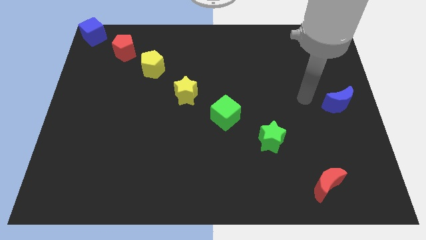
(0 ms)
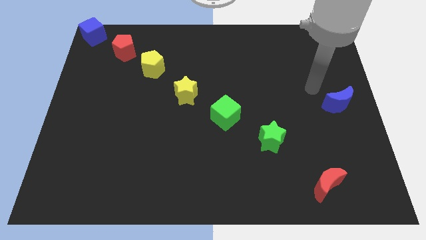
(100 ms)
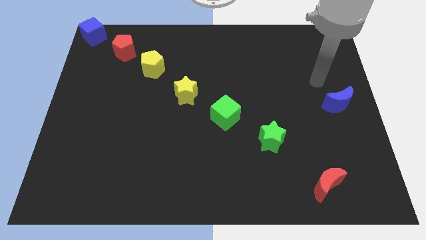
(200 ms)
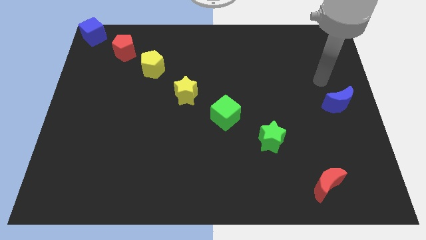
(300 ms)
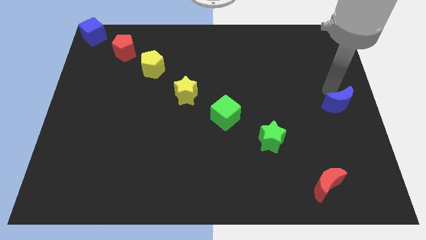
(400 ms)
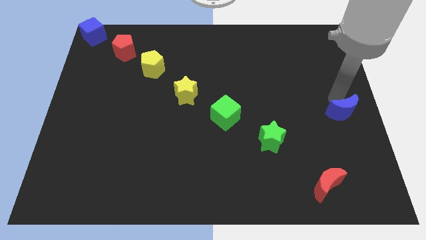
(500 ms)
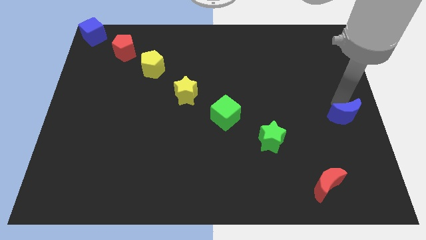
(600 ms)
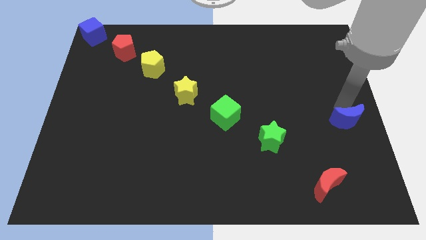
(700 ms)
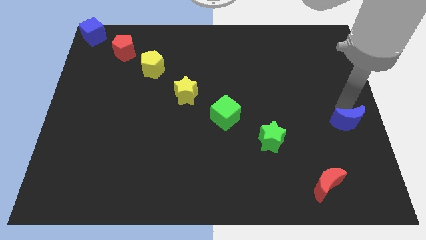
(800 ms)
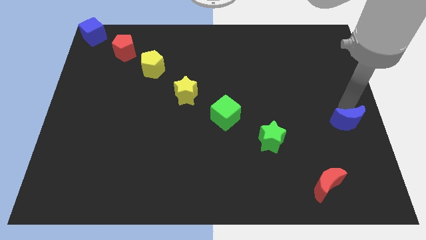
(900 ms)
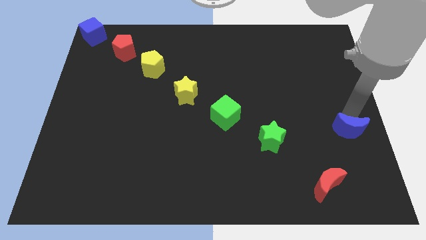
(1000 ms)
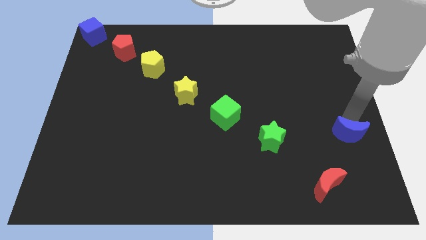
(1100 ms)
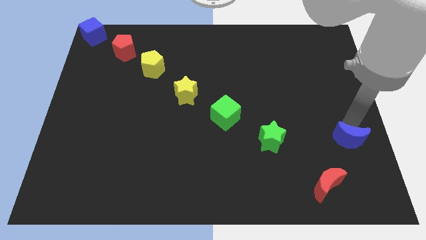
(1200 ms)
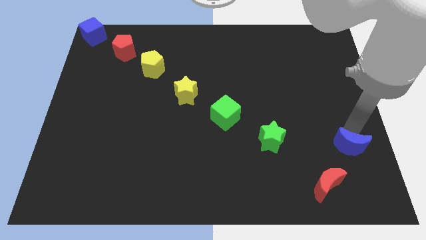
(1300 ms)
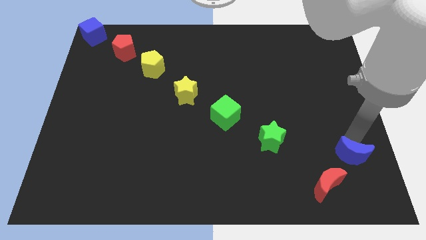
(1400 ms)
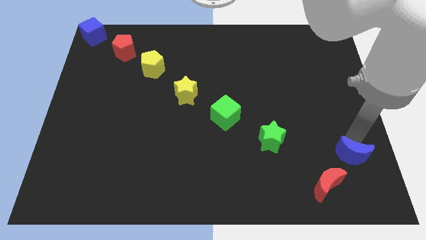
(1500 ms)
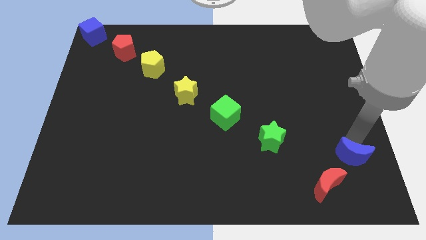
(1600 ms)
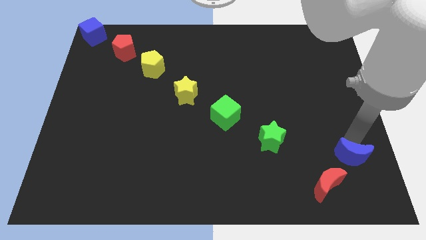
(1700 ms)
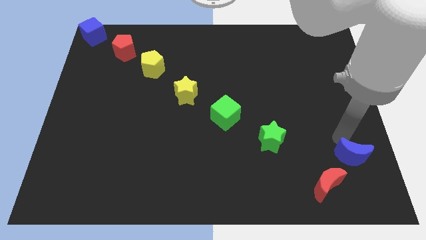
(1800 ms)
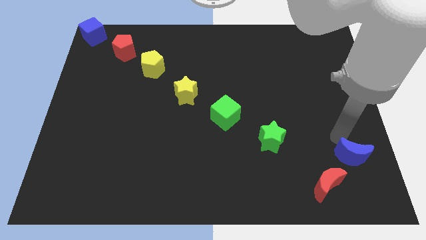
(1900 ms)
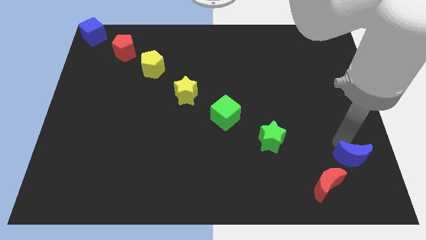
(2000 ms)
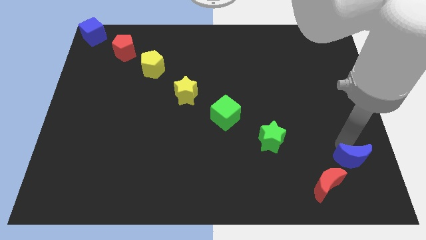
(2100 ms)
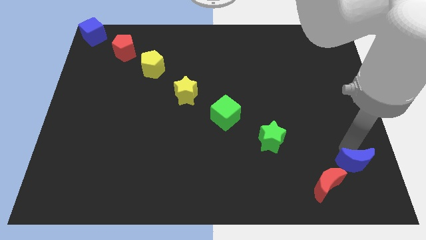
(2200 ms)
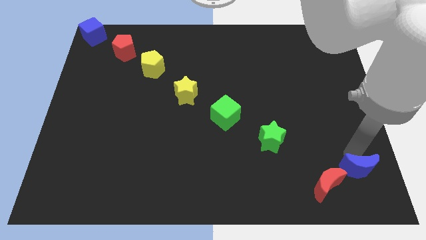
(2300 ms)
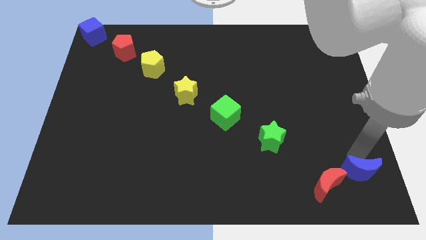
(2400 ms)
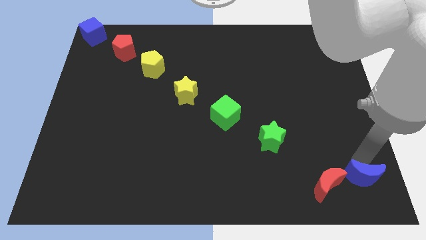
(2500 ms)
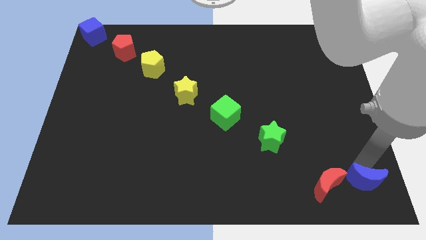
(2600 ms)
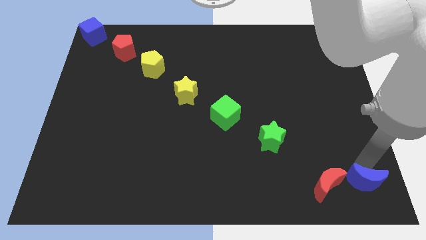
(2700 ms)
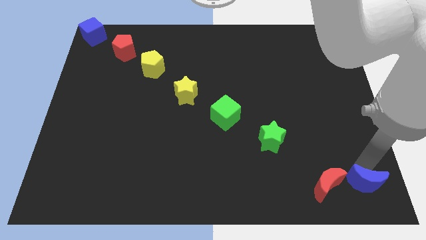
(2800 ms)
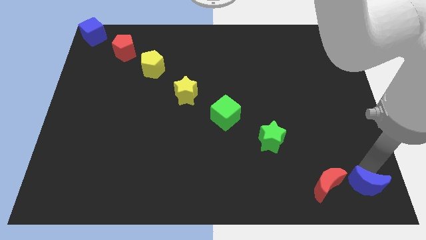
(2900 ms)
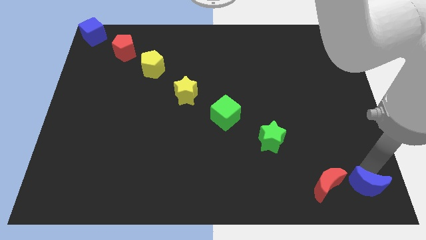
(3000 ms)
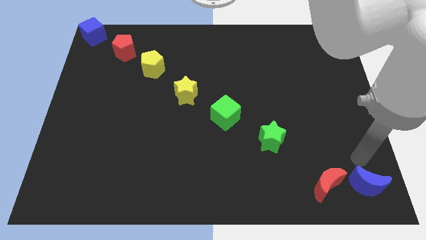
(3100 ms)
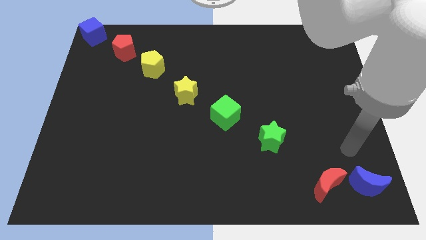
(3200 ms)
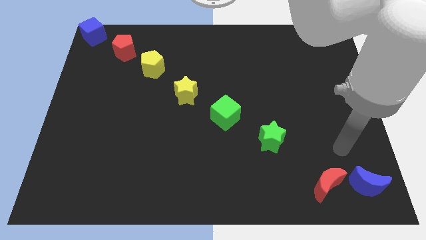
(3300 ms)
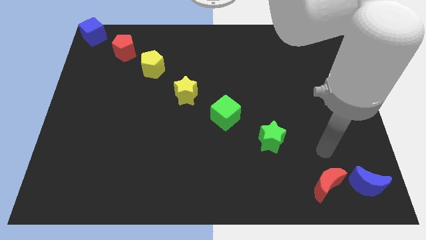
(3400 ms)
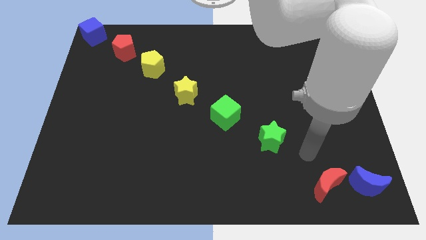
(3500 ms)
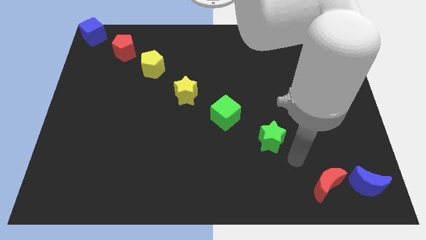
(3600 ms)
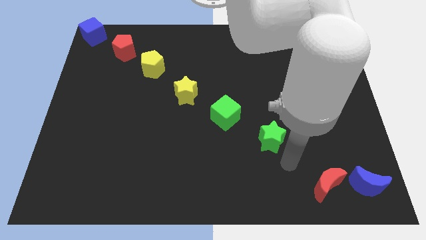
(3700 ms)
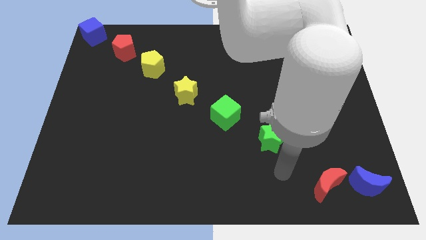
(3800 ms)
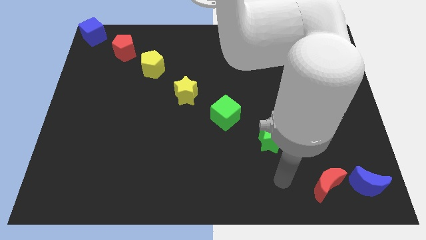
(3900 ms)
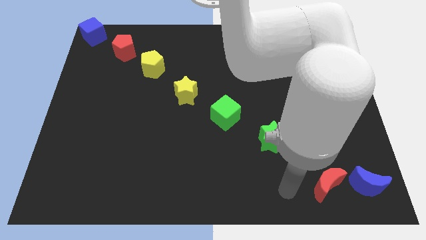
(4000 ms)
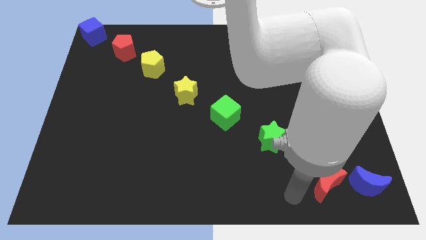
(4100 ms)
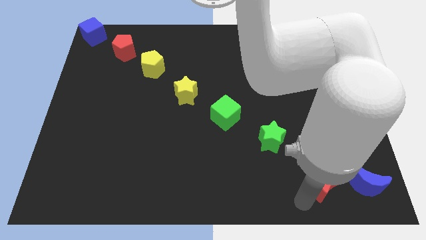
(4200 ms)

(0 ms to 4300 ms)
place the blue moon to the bottom right corner of the board

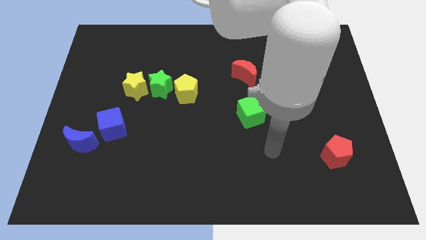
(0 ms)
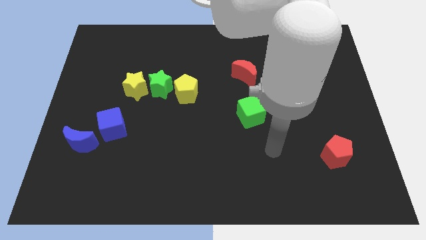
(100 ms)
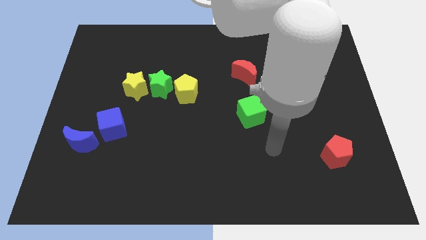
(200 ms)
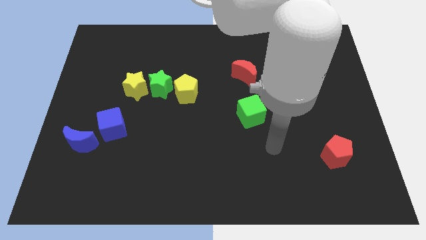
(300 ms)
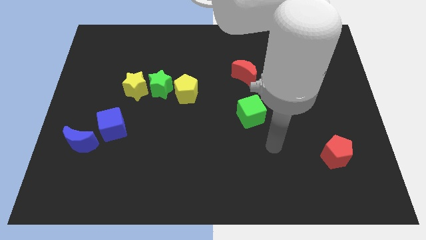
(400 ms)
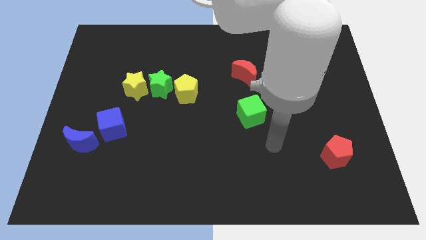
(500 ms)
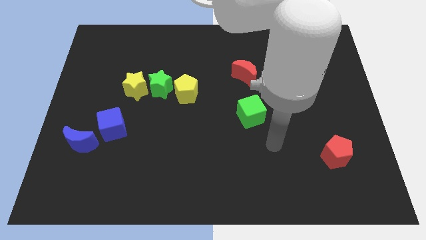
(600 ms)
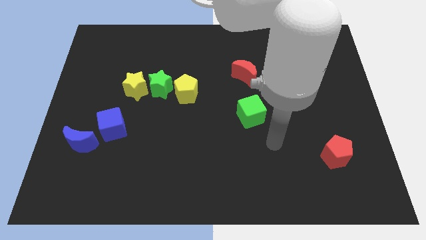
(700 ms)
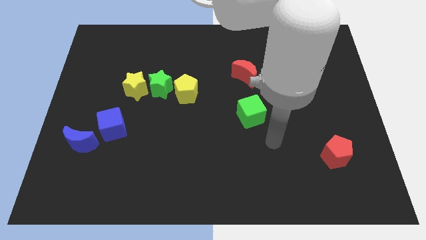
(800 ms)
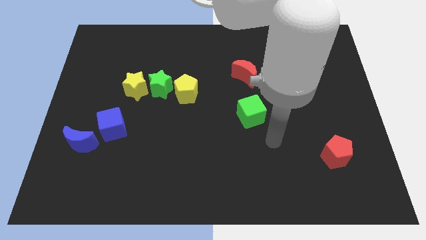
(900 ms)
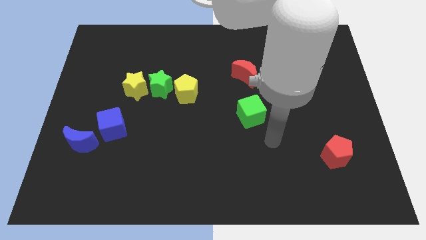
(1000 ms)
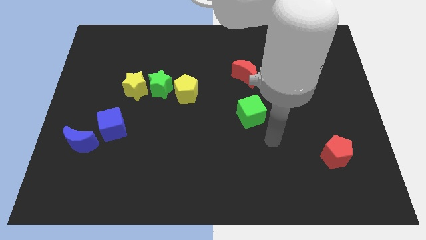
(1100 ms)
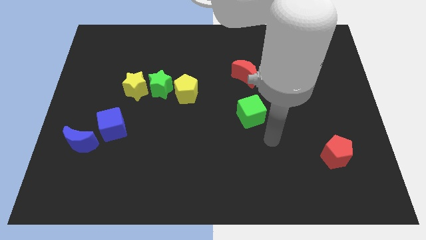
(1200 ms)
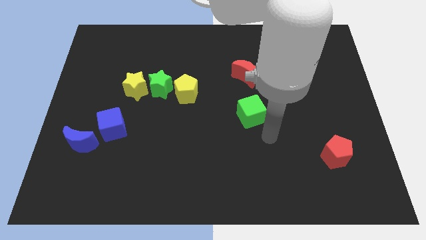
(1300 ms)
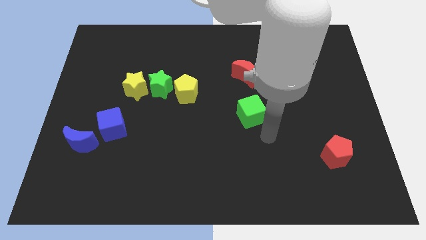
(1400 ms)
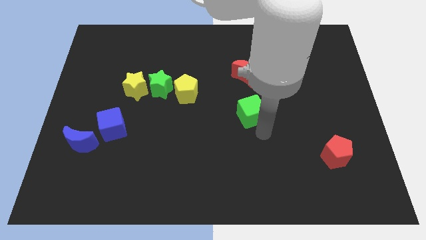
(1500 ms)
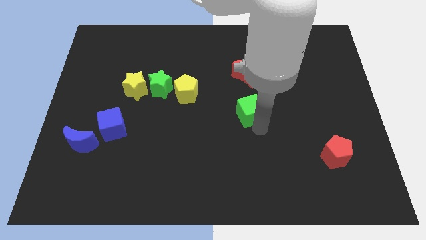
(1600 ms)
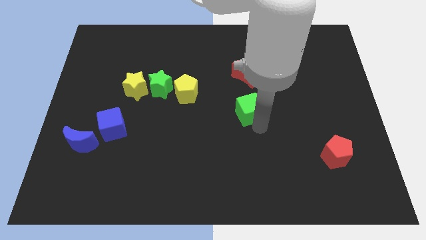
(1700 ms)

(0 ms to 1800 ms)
touch the bottom side of the green cube

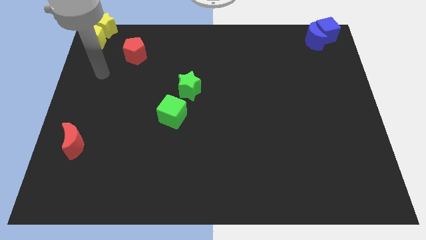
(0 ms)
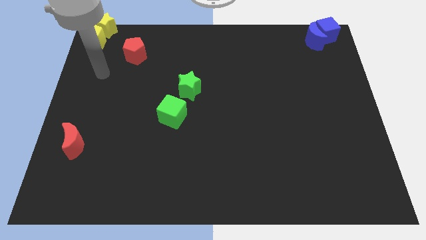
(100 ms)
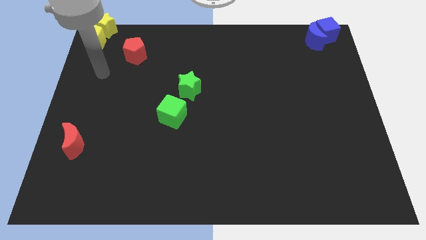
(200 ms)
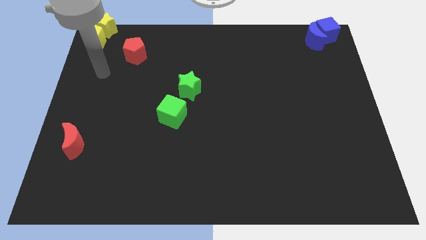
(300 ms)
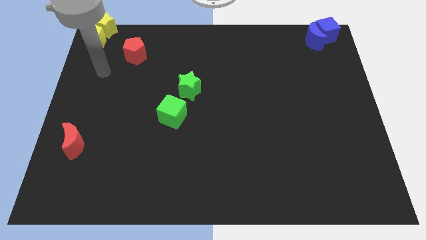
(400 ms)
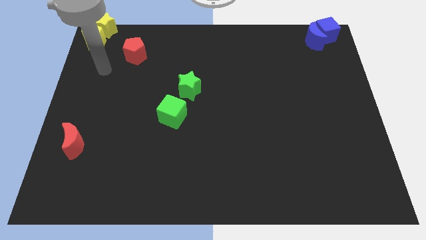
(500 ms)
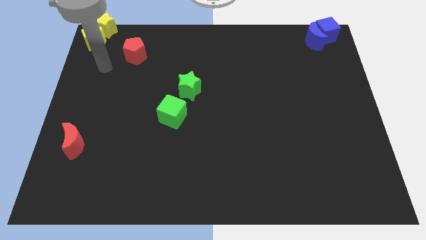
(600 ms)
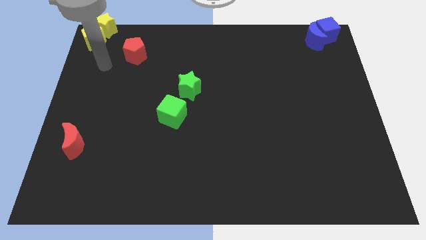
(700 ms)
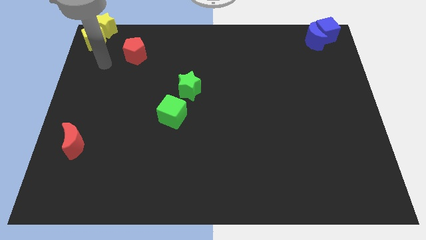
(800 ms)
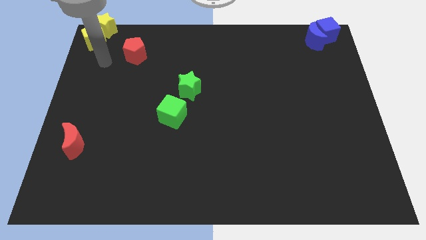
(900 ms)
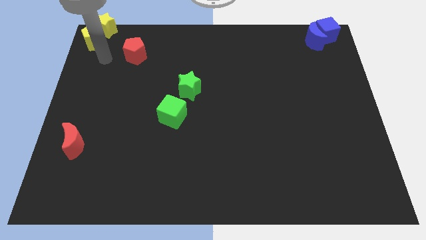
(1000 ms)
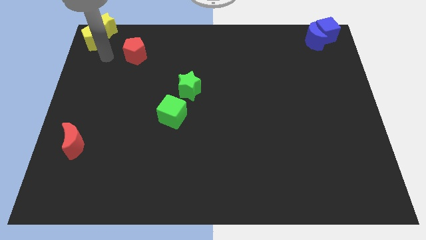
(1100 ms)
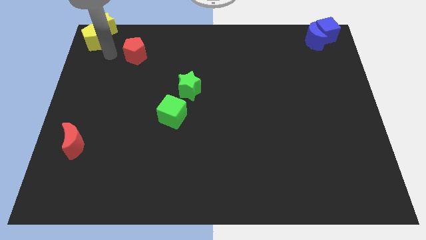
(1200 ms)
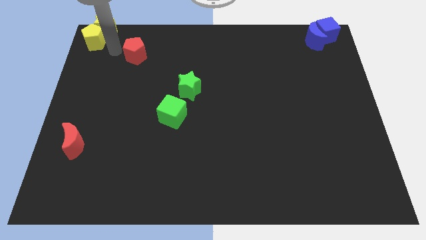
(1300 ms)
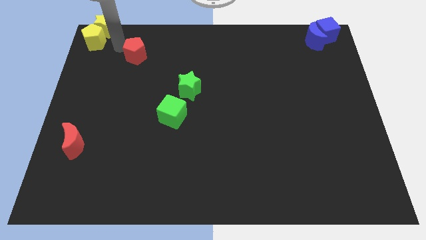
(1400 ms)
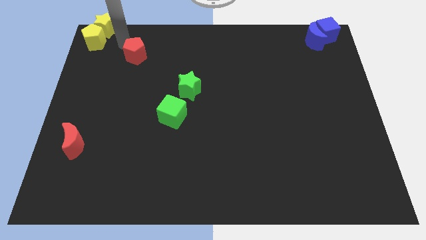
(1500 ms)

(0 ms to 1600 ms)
point your arm towards the top left corner of the red pentagon

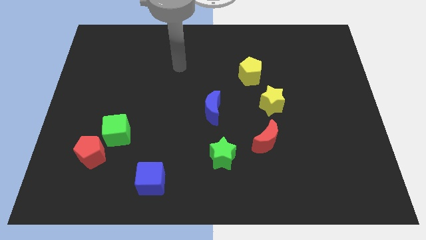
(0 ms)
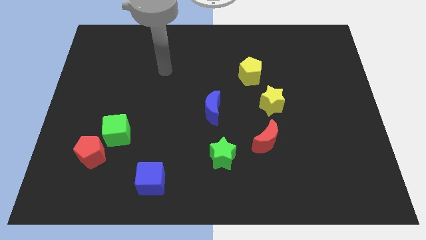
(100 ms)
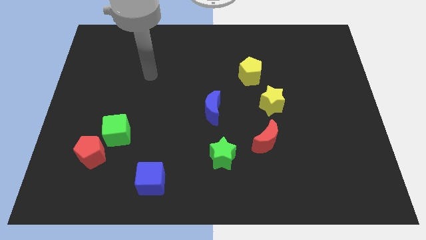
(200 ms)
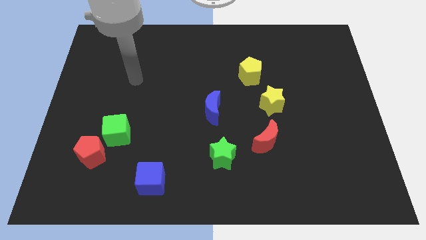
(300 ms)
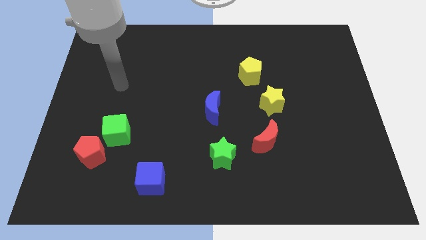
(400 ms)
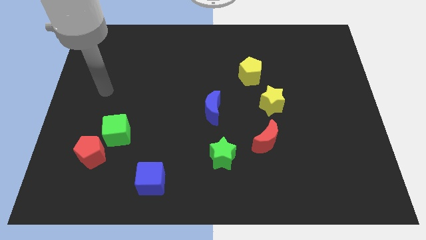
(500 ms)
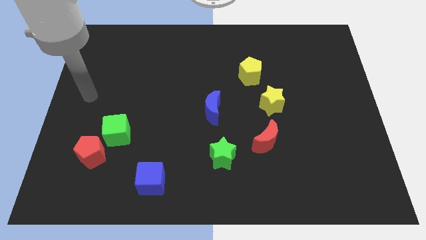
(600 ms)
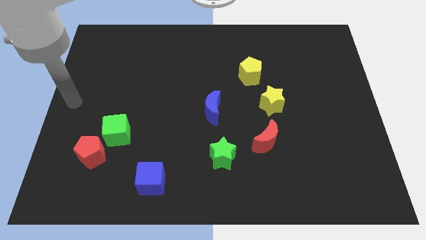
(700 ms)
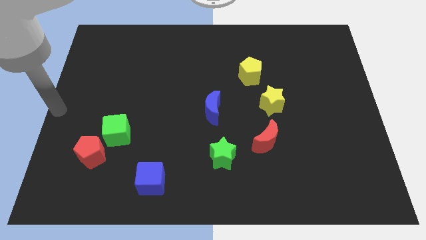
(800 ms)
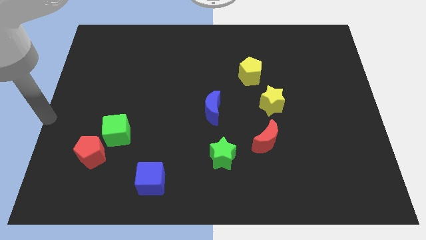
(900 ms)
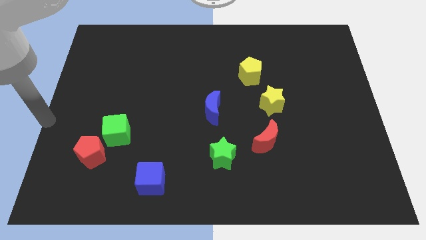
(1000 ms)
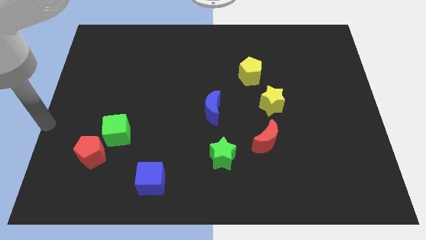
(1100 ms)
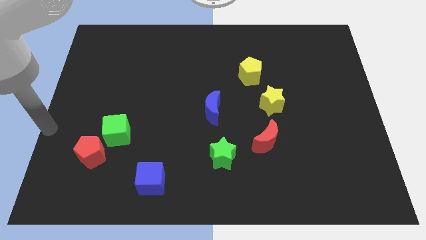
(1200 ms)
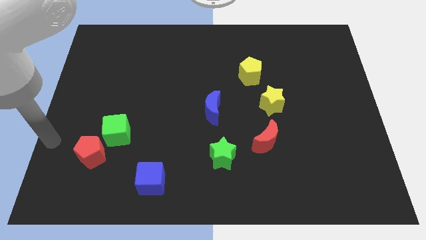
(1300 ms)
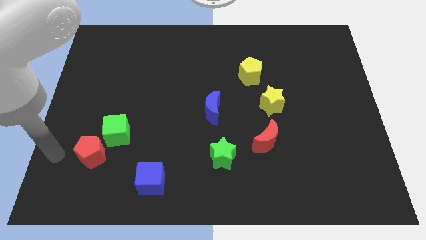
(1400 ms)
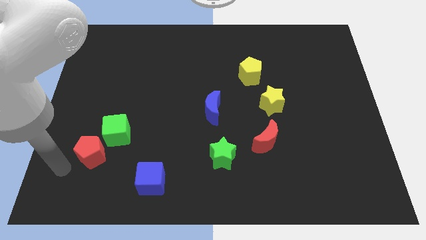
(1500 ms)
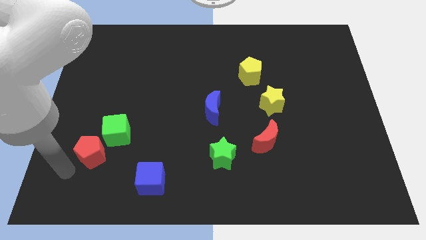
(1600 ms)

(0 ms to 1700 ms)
move your arm towards the red pentagon
